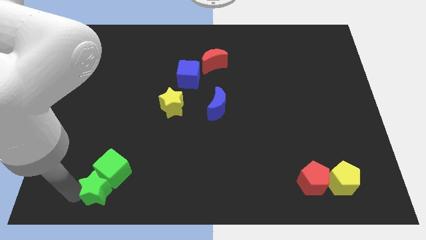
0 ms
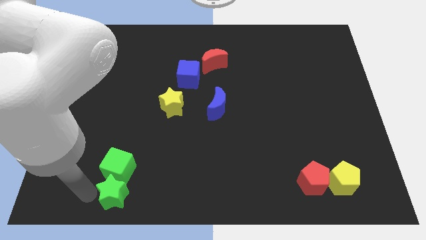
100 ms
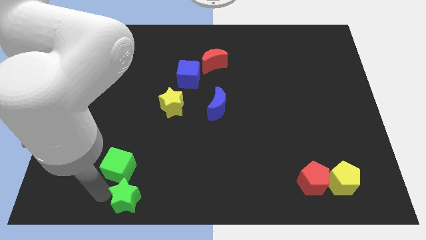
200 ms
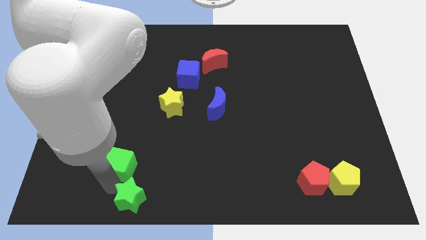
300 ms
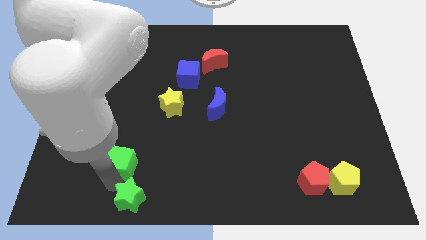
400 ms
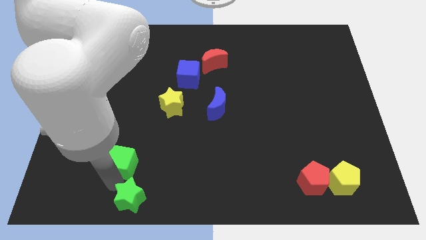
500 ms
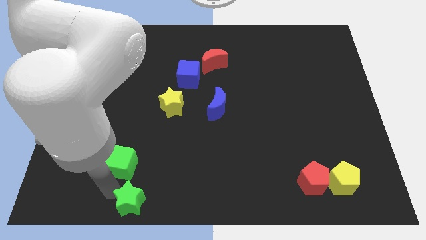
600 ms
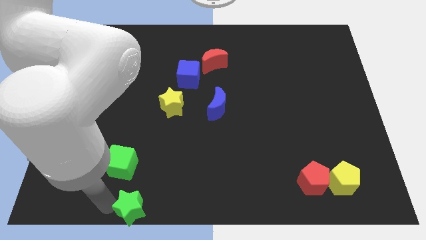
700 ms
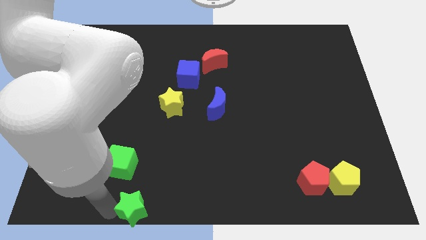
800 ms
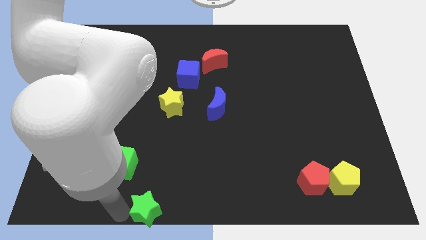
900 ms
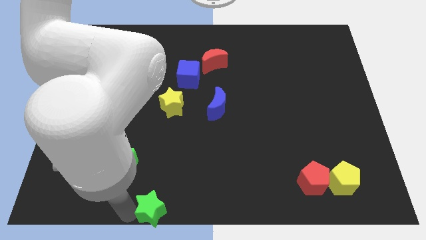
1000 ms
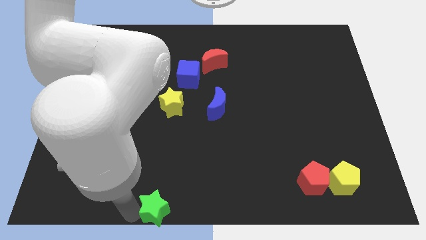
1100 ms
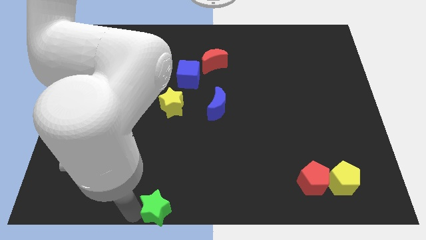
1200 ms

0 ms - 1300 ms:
push the green star away from the green cube

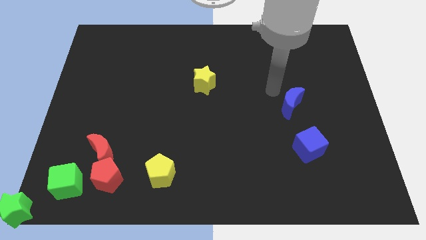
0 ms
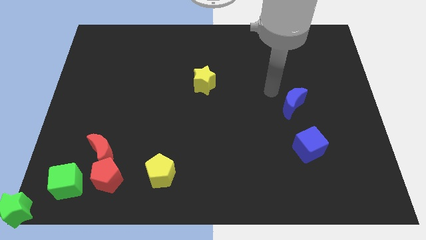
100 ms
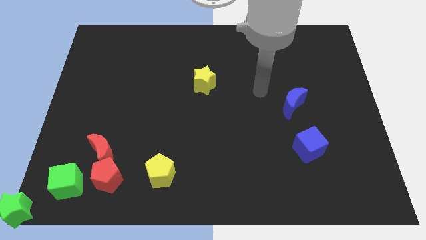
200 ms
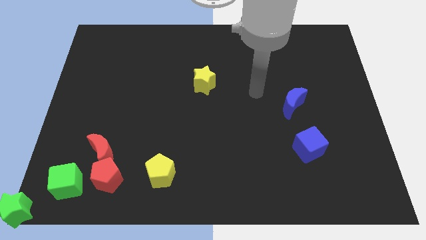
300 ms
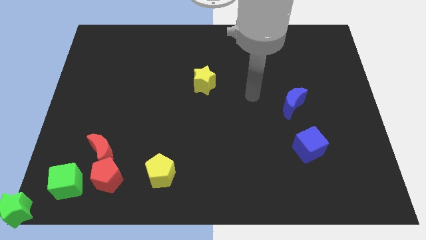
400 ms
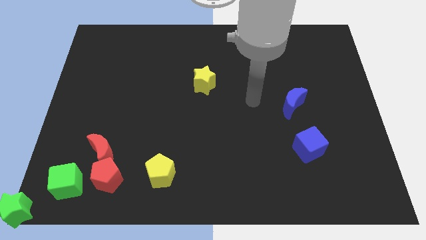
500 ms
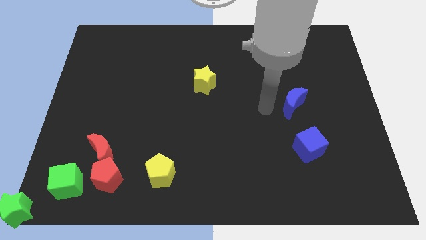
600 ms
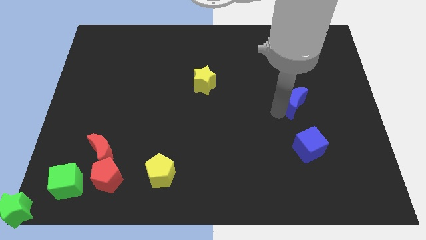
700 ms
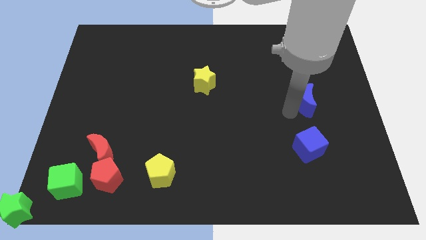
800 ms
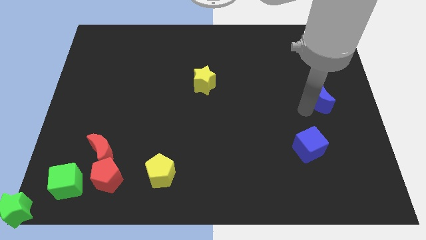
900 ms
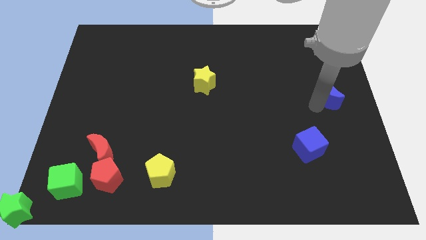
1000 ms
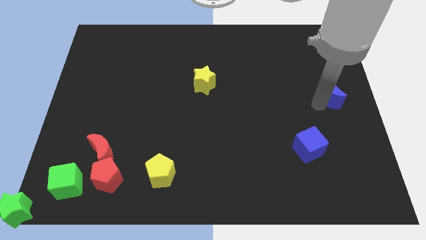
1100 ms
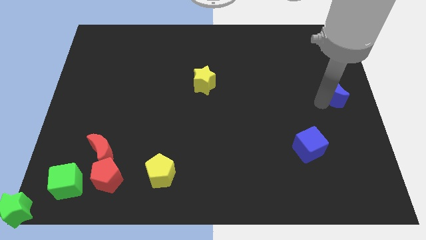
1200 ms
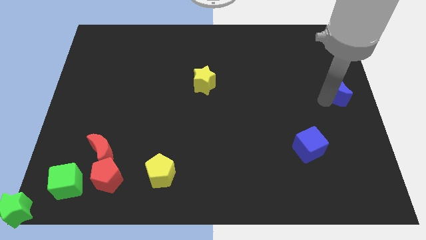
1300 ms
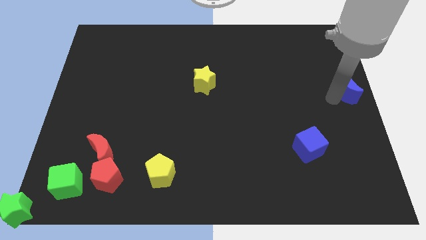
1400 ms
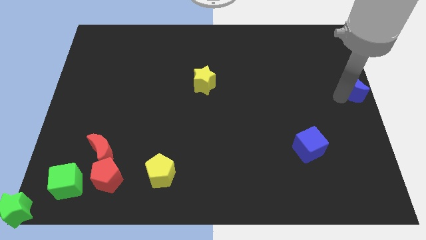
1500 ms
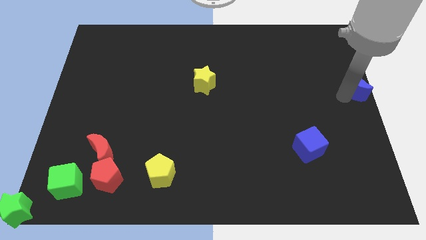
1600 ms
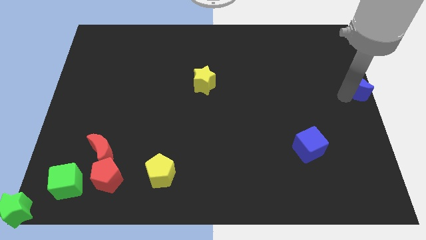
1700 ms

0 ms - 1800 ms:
move the blue moon parallel to yellow star

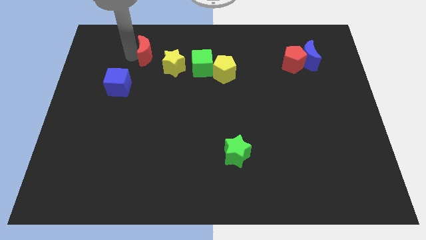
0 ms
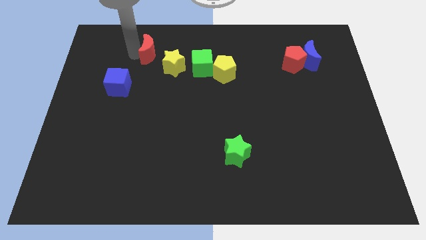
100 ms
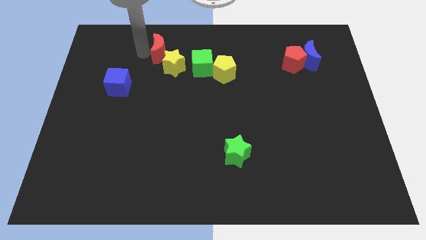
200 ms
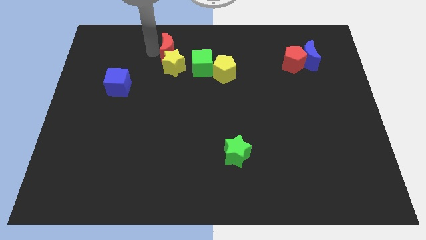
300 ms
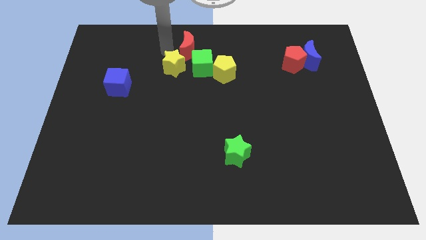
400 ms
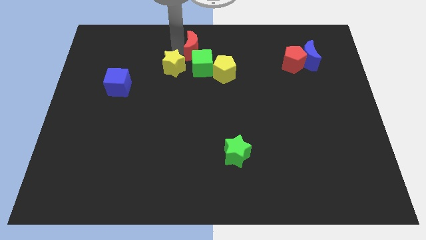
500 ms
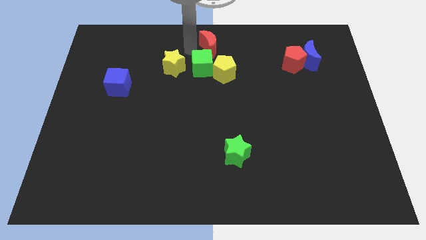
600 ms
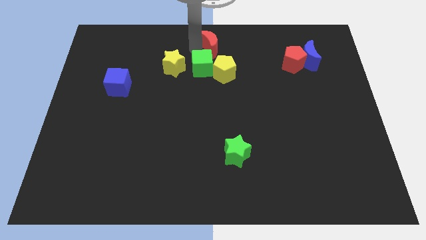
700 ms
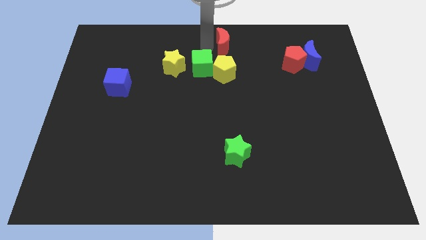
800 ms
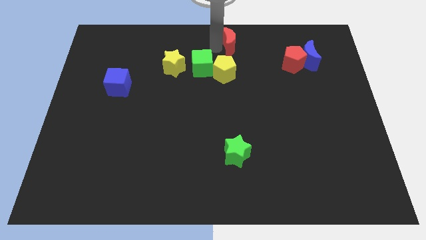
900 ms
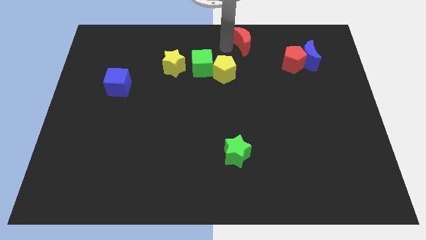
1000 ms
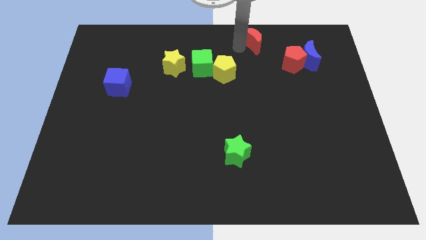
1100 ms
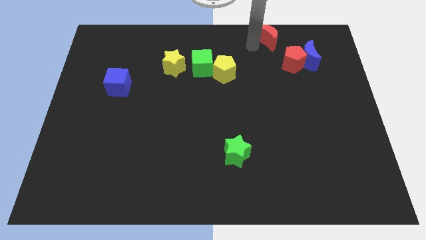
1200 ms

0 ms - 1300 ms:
move the red crescent to the right of the board

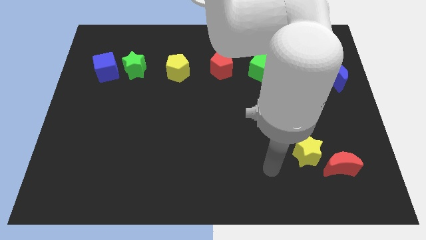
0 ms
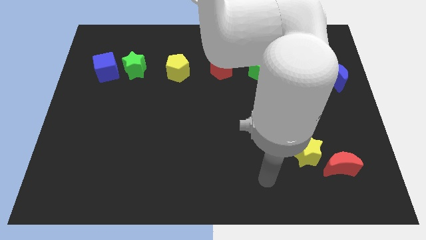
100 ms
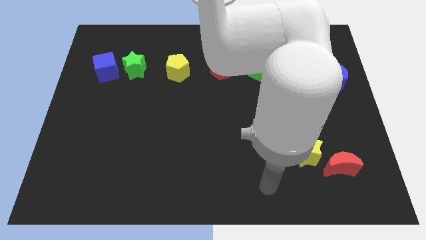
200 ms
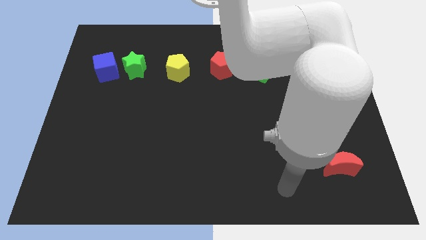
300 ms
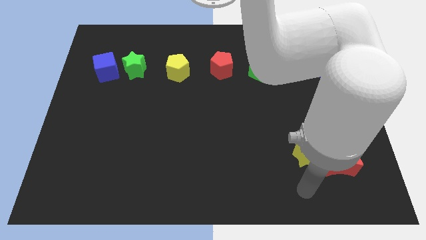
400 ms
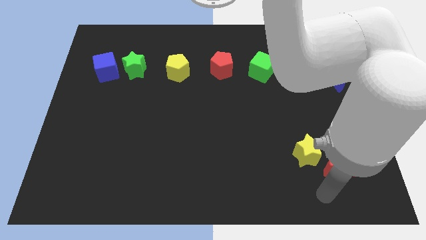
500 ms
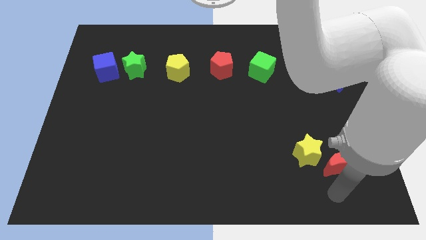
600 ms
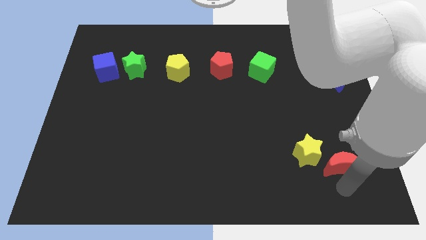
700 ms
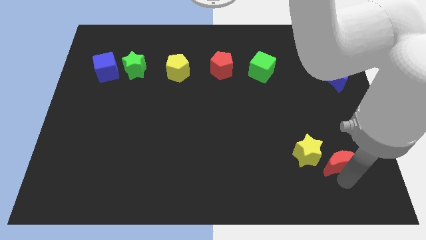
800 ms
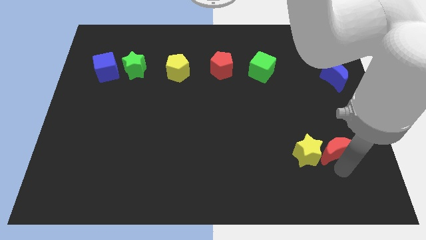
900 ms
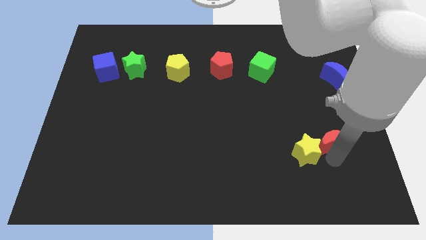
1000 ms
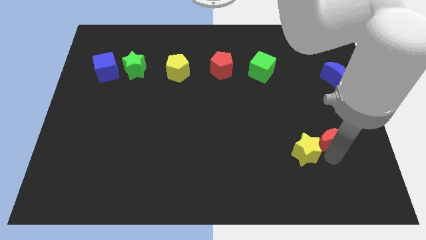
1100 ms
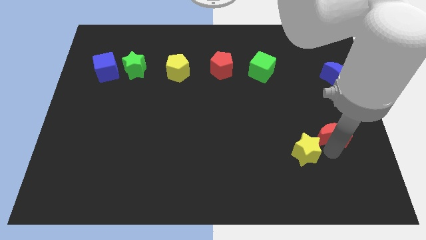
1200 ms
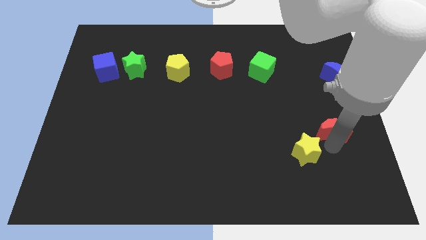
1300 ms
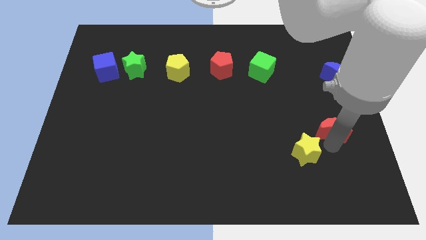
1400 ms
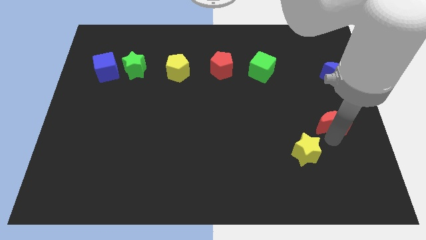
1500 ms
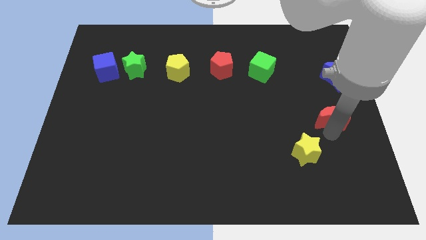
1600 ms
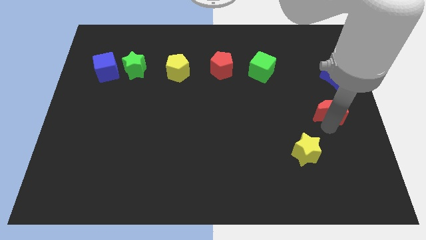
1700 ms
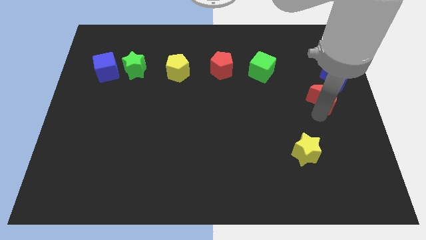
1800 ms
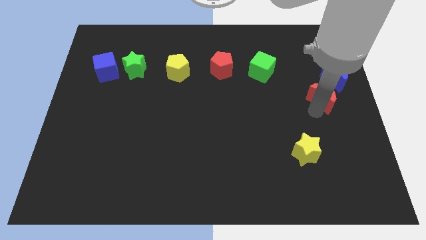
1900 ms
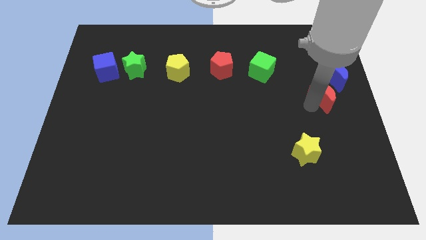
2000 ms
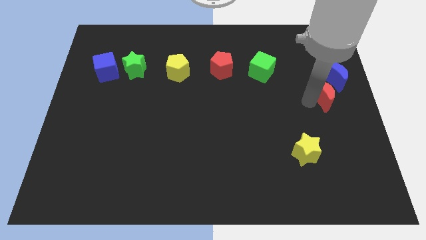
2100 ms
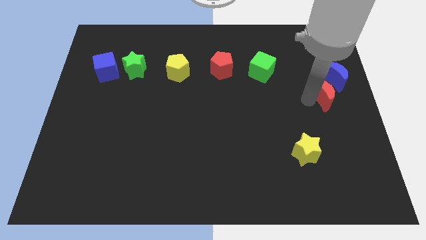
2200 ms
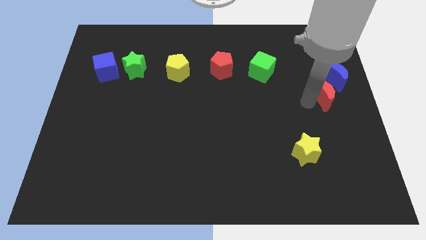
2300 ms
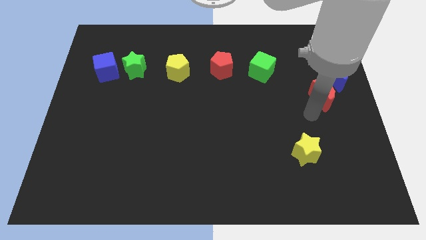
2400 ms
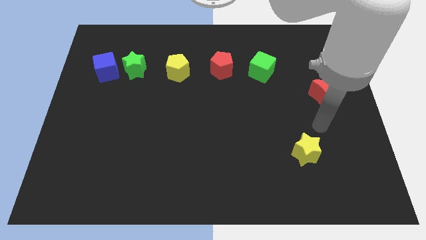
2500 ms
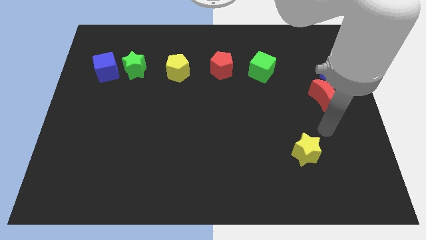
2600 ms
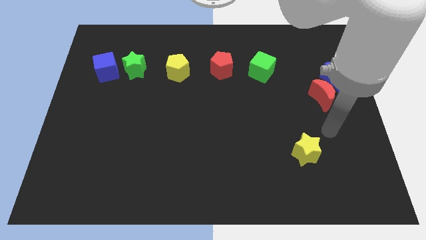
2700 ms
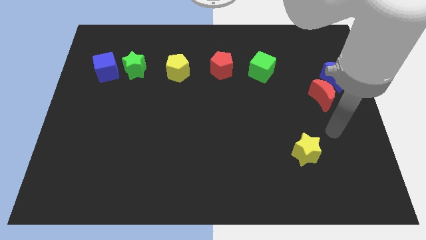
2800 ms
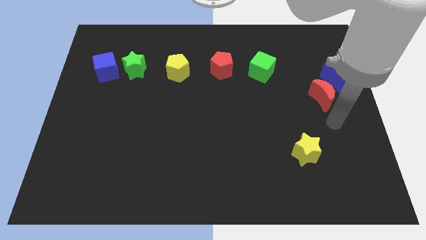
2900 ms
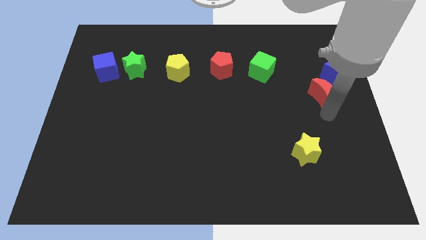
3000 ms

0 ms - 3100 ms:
move the red moon into the blue moon

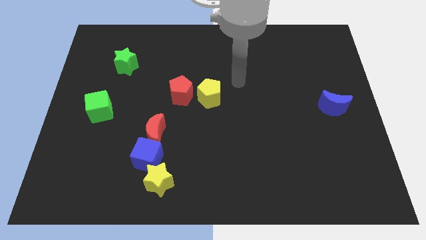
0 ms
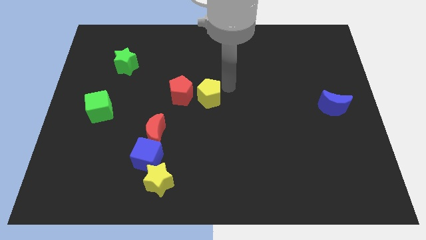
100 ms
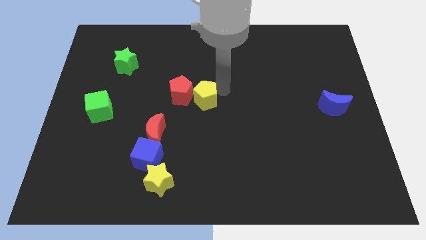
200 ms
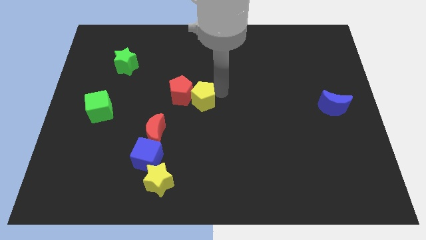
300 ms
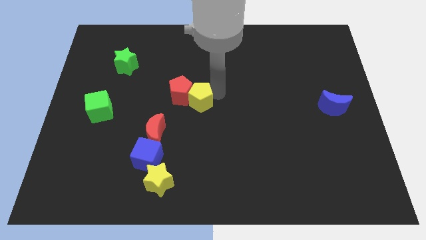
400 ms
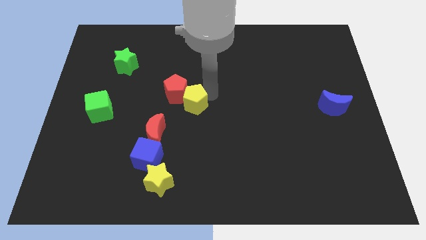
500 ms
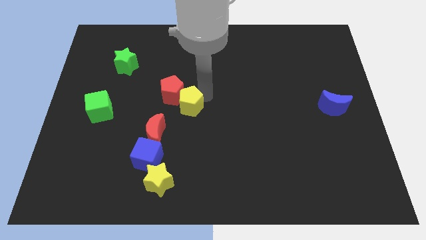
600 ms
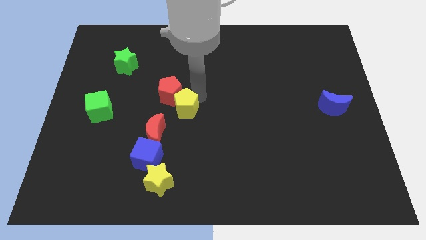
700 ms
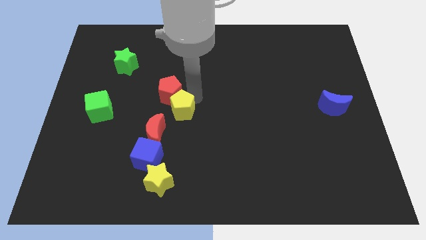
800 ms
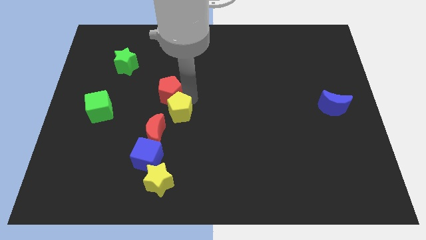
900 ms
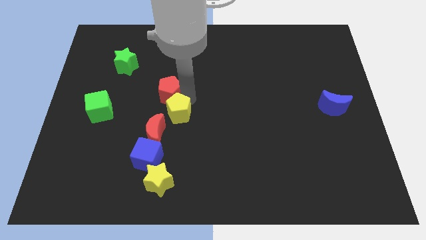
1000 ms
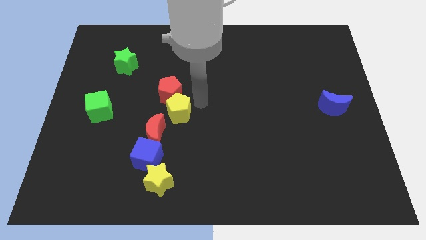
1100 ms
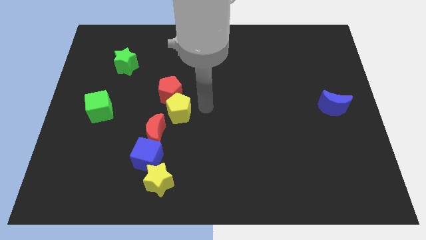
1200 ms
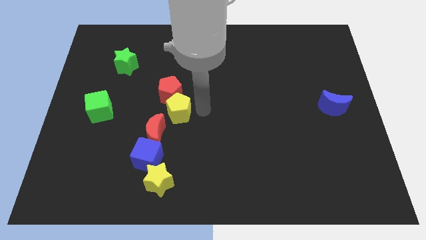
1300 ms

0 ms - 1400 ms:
move the yellow pentagon diagonally bottom right to the red pentagon
